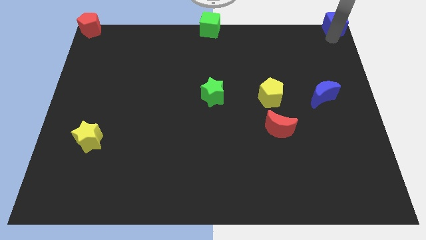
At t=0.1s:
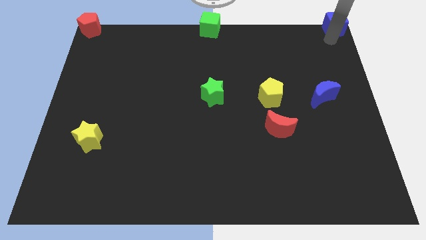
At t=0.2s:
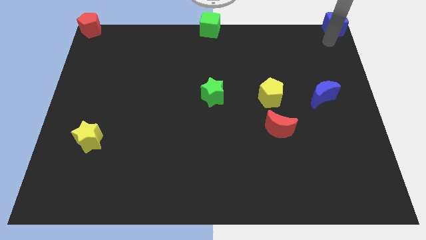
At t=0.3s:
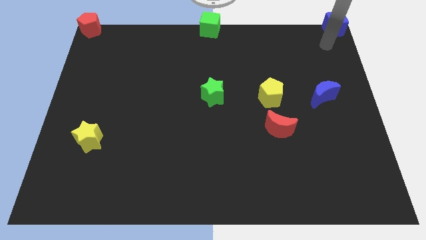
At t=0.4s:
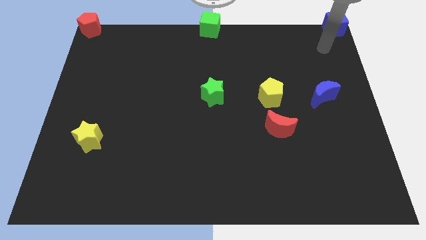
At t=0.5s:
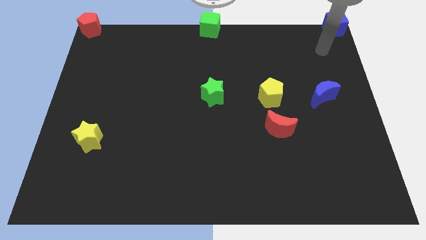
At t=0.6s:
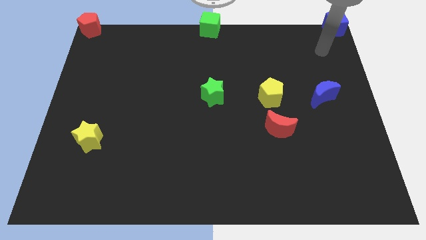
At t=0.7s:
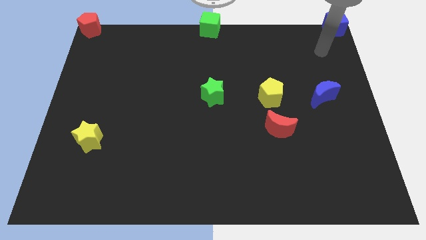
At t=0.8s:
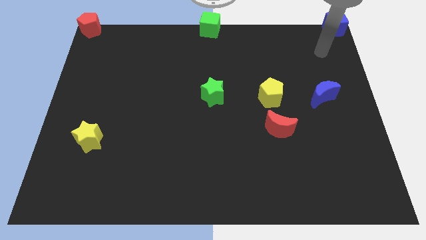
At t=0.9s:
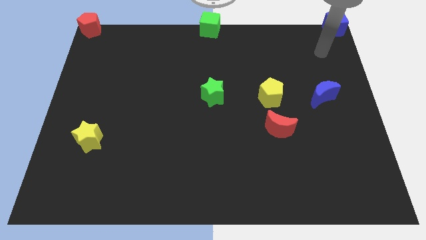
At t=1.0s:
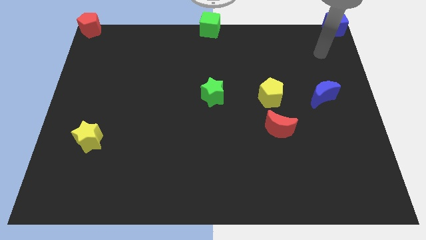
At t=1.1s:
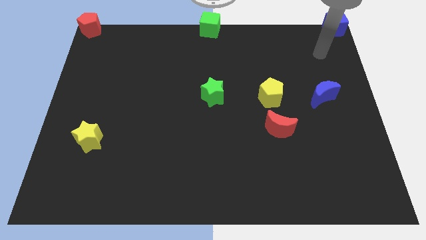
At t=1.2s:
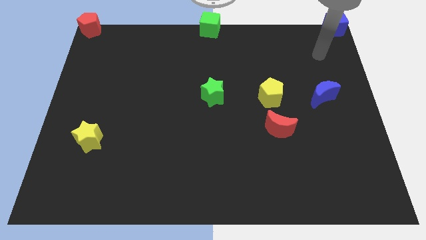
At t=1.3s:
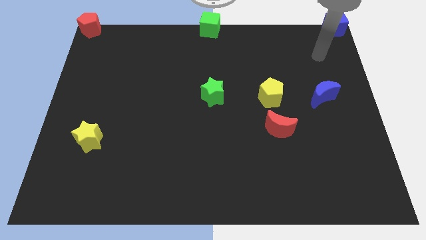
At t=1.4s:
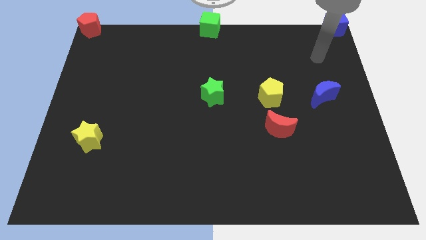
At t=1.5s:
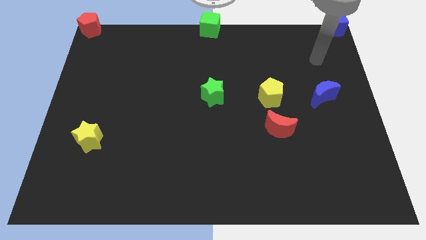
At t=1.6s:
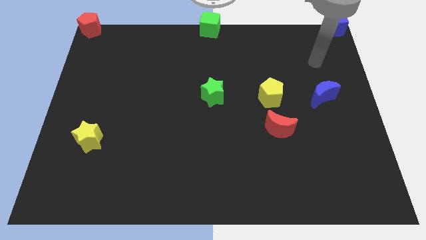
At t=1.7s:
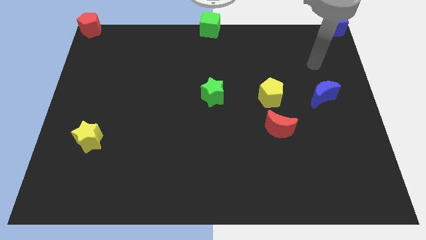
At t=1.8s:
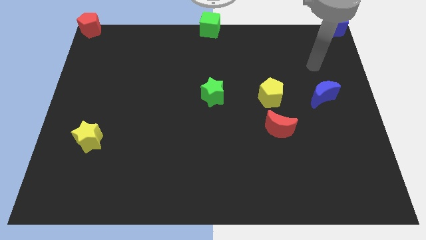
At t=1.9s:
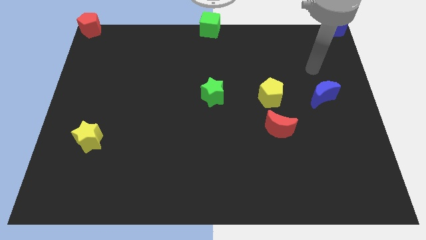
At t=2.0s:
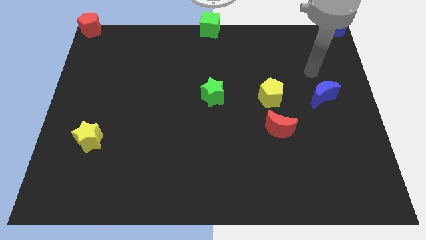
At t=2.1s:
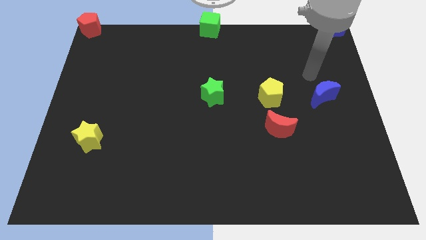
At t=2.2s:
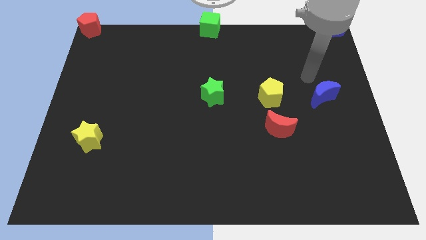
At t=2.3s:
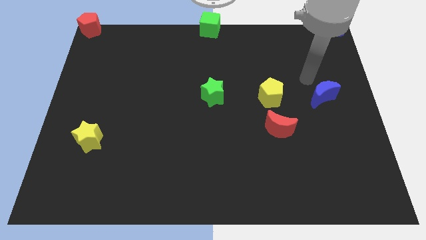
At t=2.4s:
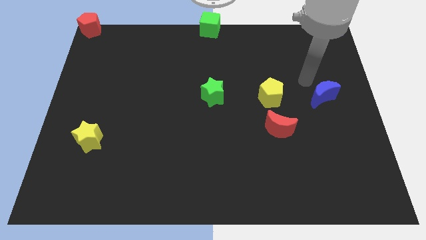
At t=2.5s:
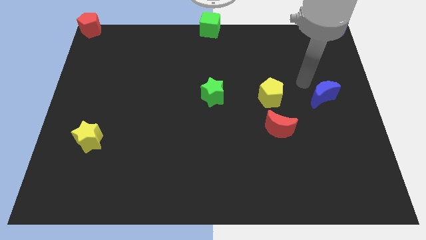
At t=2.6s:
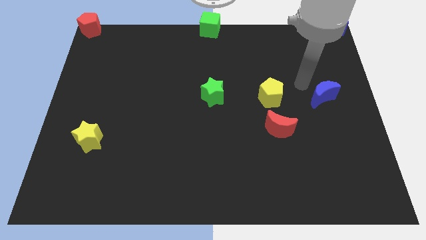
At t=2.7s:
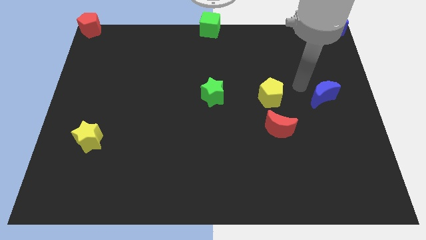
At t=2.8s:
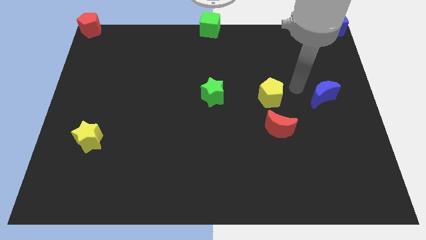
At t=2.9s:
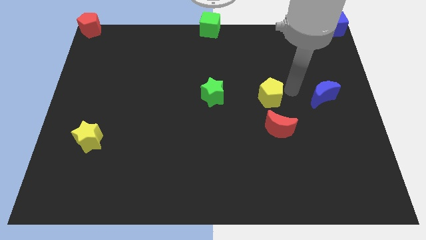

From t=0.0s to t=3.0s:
move your arm and point towards yellow pentagon

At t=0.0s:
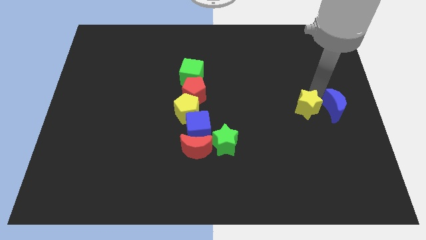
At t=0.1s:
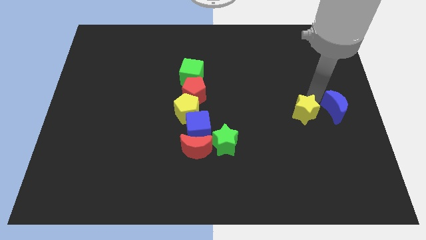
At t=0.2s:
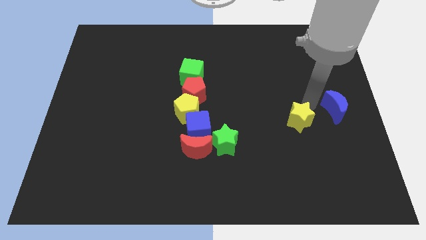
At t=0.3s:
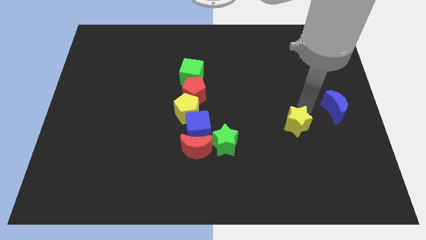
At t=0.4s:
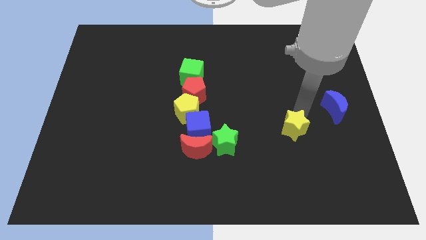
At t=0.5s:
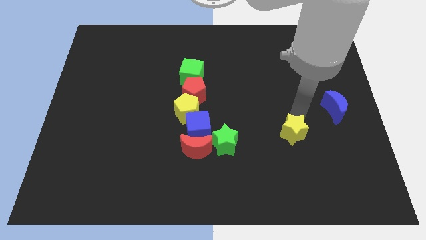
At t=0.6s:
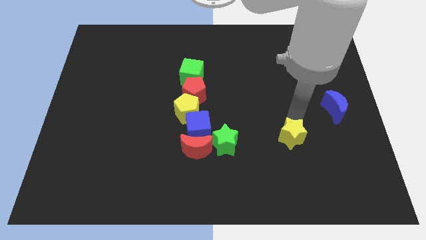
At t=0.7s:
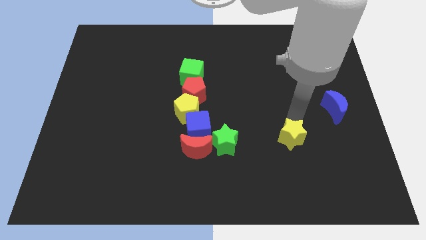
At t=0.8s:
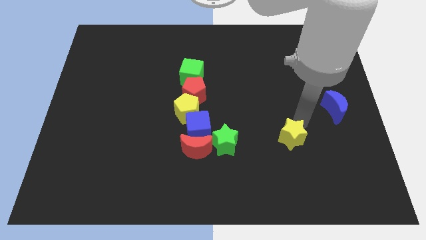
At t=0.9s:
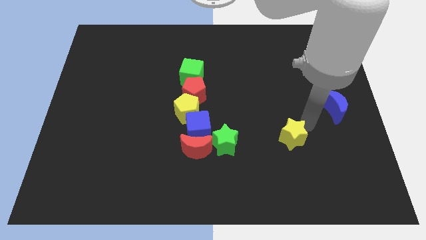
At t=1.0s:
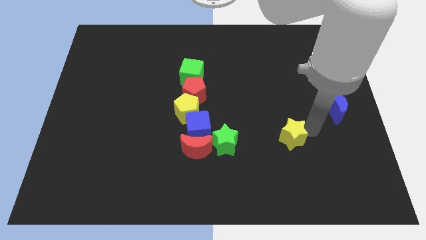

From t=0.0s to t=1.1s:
move the yellow star to the right of the green star

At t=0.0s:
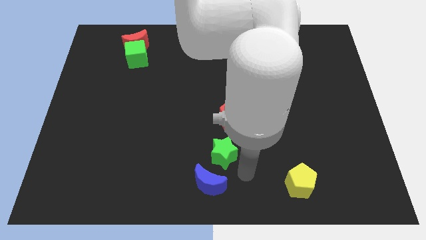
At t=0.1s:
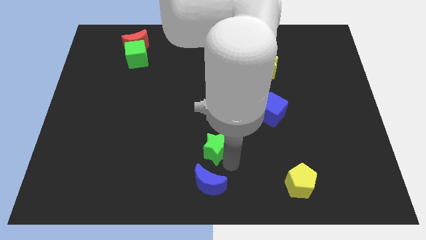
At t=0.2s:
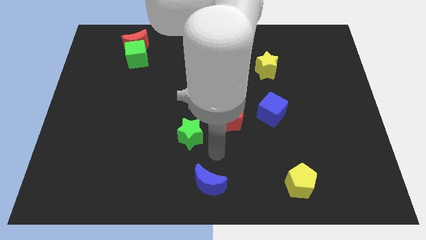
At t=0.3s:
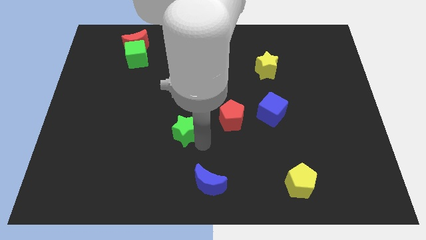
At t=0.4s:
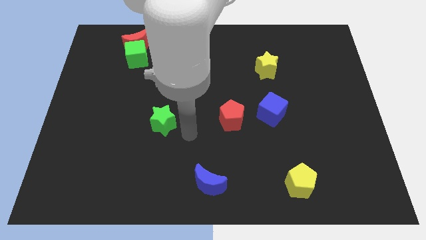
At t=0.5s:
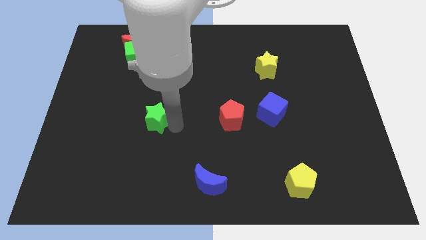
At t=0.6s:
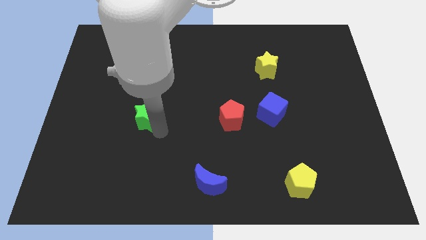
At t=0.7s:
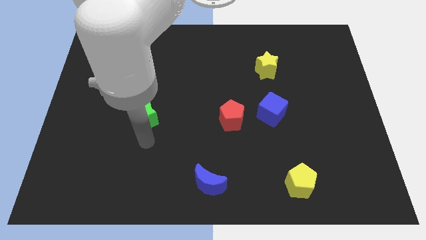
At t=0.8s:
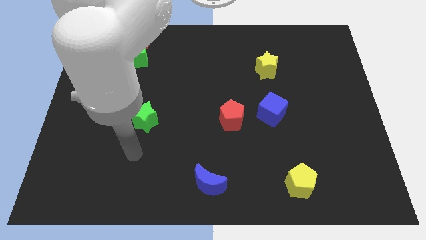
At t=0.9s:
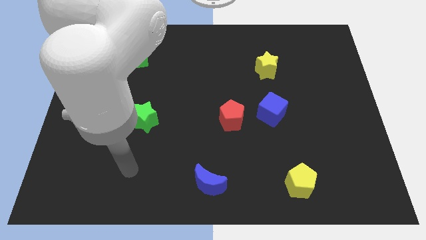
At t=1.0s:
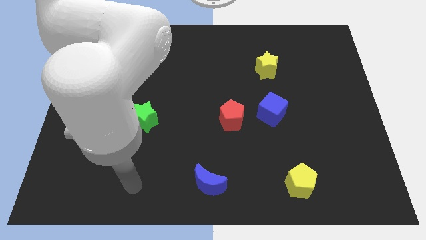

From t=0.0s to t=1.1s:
move the green star parallel to the red pentagon

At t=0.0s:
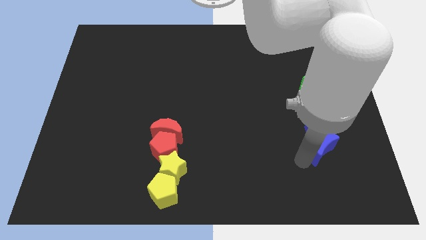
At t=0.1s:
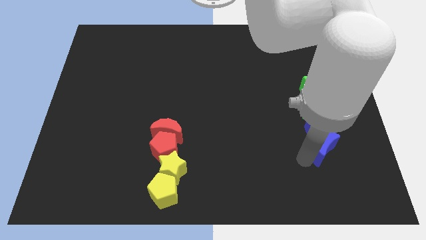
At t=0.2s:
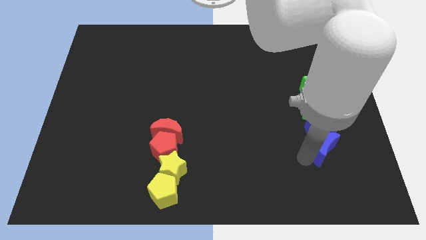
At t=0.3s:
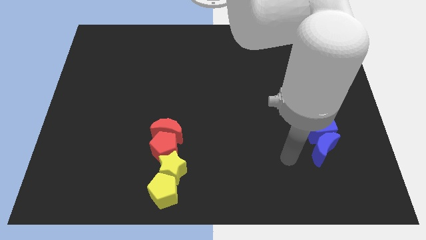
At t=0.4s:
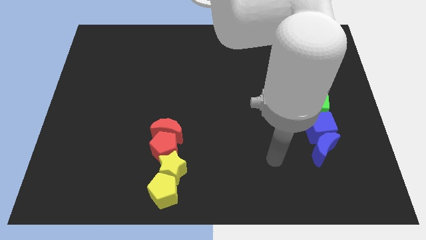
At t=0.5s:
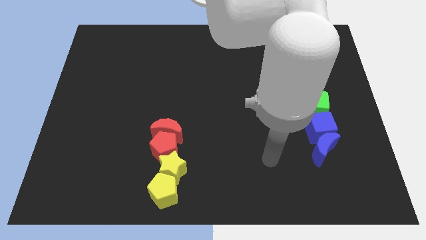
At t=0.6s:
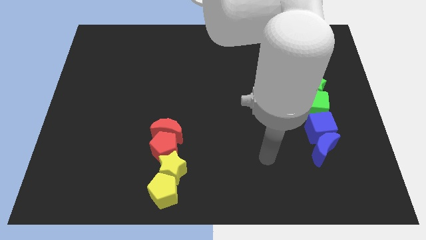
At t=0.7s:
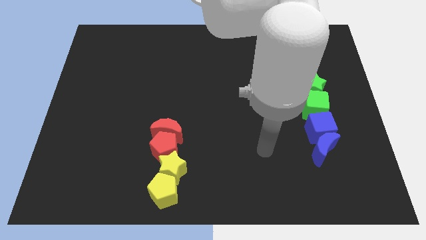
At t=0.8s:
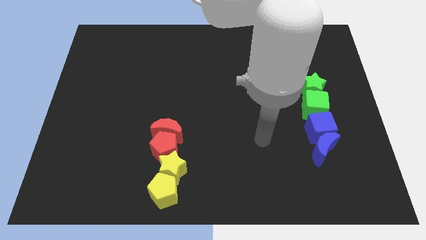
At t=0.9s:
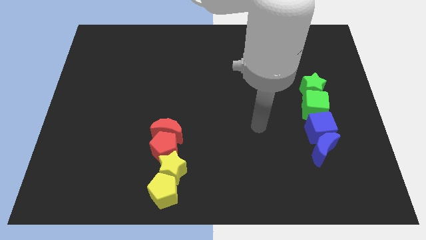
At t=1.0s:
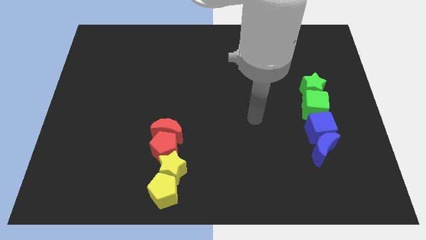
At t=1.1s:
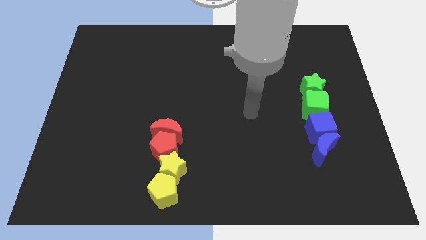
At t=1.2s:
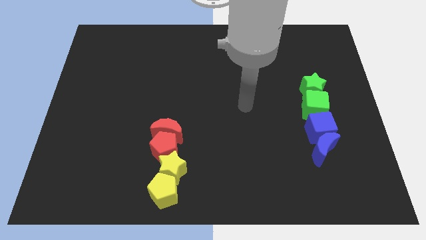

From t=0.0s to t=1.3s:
move the arm away from the blue moon

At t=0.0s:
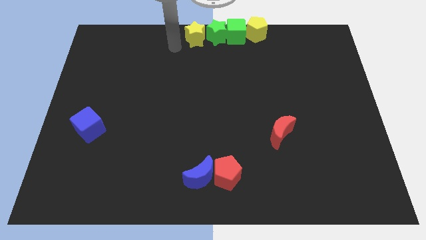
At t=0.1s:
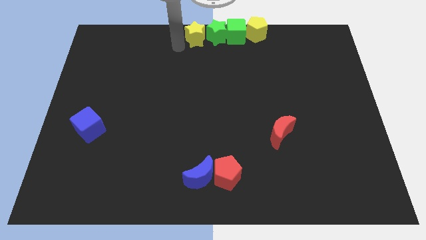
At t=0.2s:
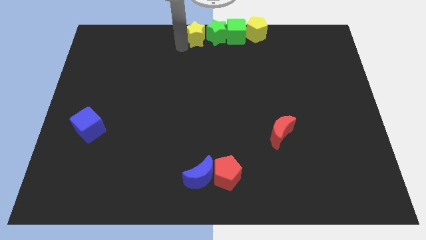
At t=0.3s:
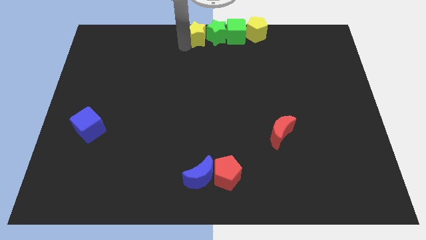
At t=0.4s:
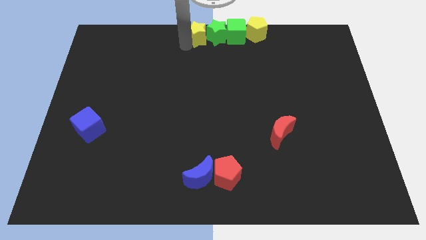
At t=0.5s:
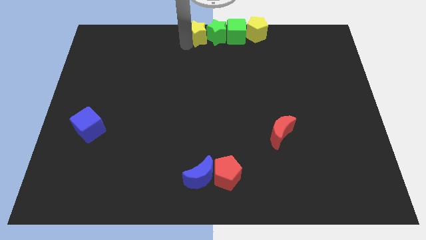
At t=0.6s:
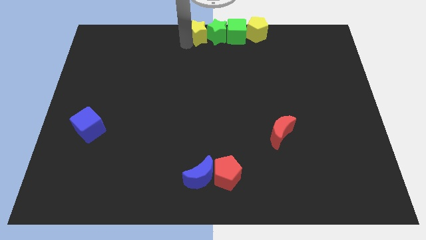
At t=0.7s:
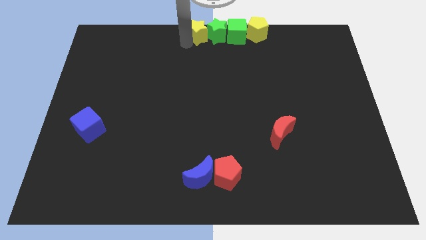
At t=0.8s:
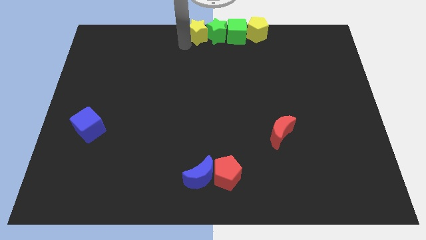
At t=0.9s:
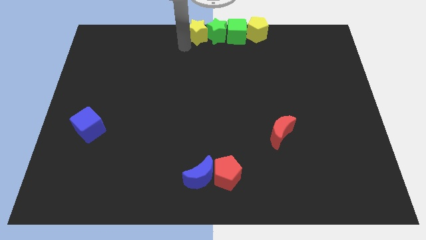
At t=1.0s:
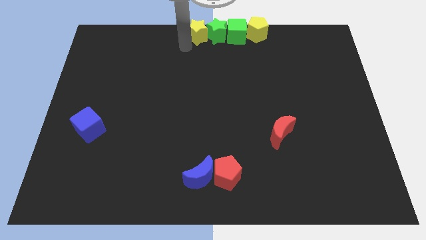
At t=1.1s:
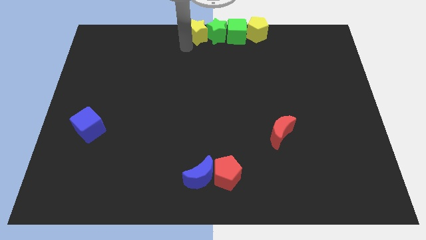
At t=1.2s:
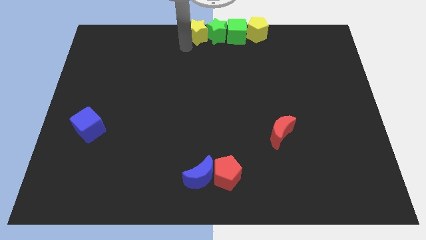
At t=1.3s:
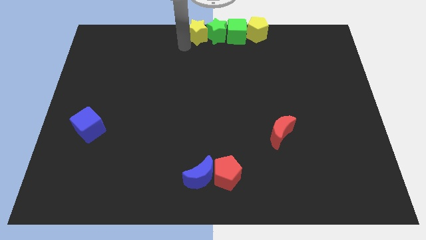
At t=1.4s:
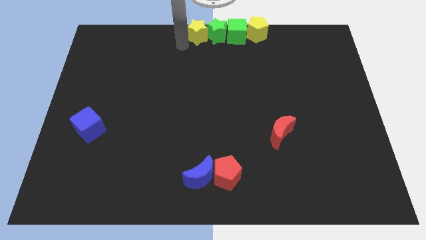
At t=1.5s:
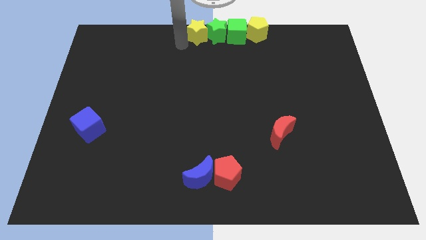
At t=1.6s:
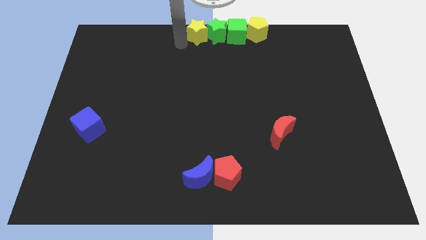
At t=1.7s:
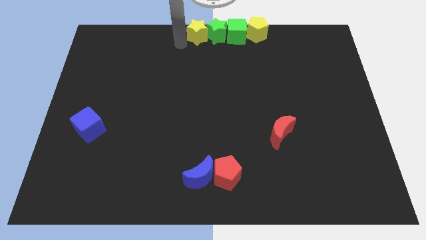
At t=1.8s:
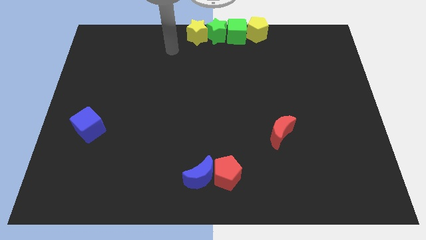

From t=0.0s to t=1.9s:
push the yellow star towards the left of the green star at the top center of the board

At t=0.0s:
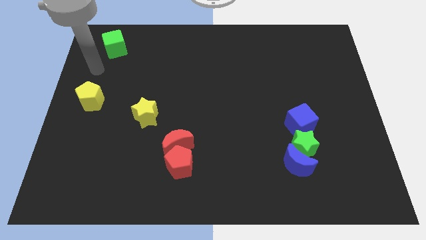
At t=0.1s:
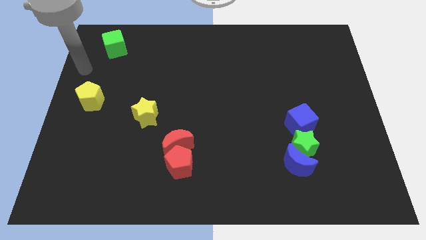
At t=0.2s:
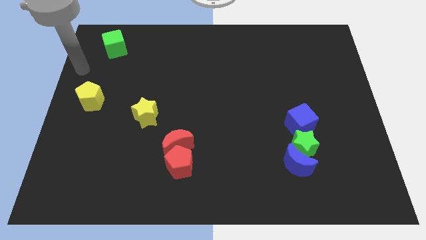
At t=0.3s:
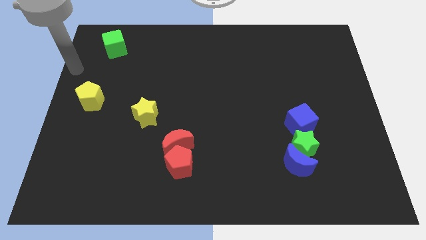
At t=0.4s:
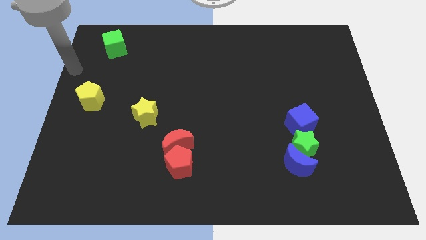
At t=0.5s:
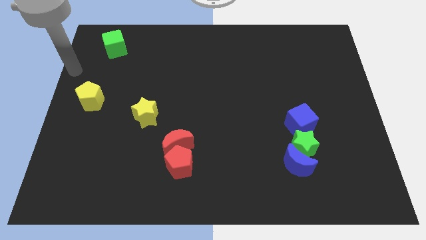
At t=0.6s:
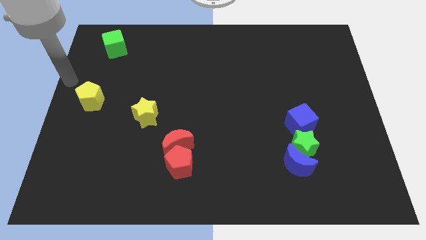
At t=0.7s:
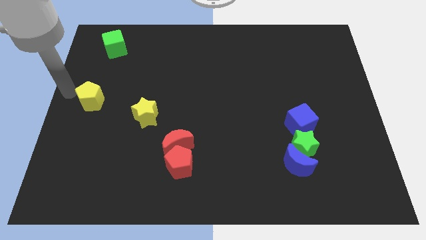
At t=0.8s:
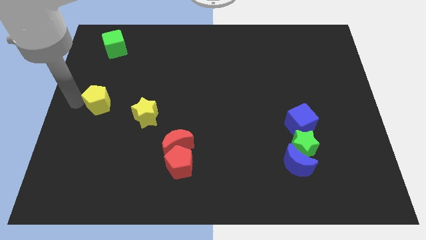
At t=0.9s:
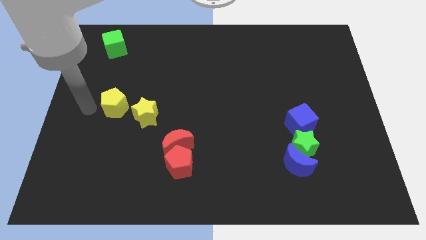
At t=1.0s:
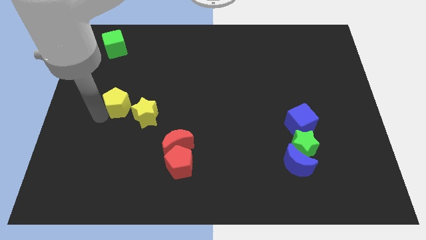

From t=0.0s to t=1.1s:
move the yellow pentagon towards the yellow star
